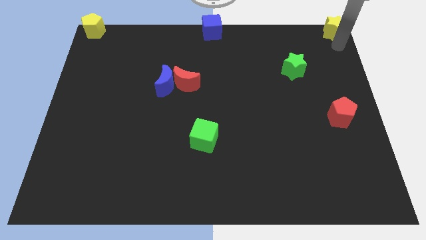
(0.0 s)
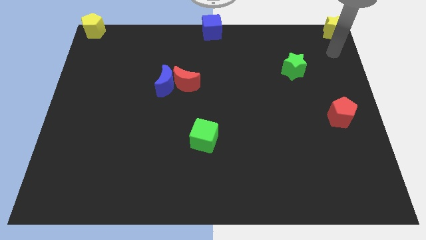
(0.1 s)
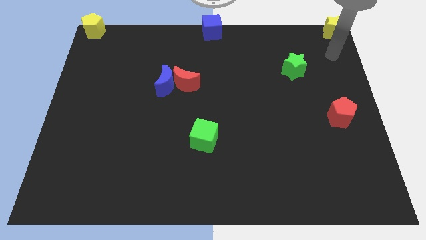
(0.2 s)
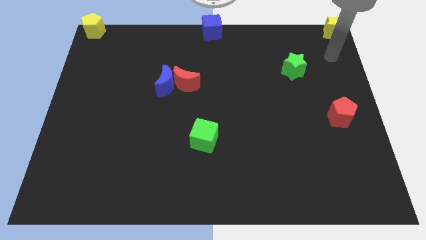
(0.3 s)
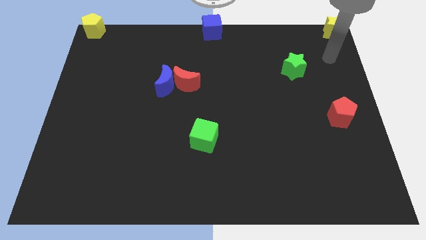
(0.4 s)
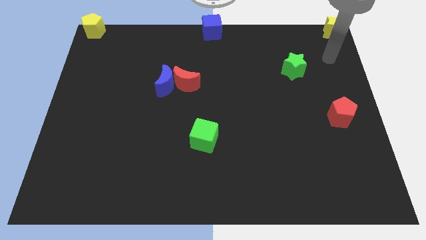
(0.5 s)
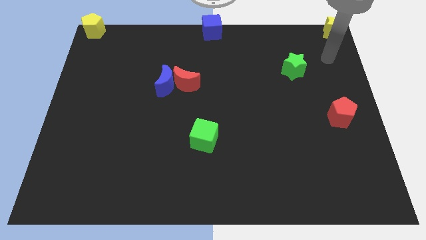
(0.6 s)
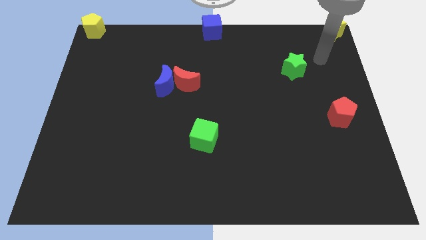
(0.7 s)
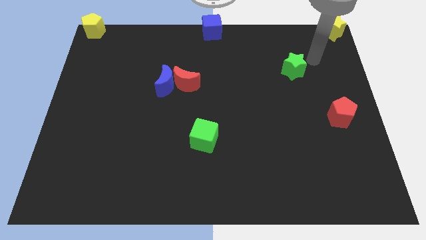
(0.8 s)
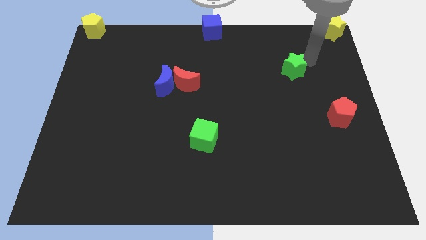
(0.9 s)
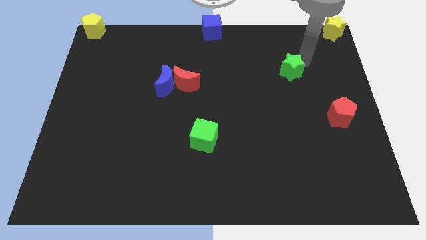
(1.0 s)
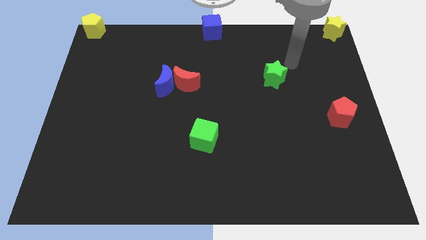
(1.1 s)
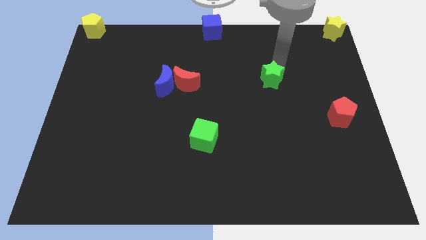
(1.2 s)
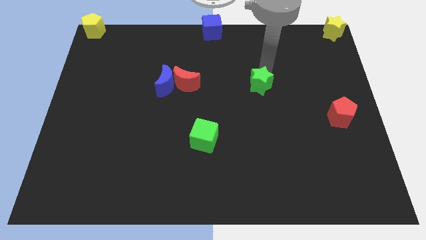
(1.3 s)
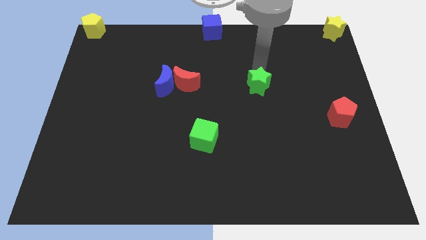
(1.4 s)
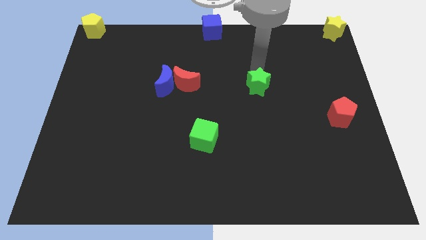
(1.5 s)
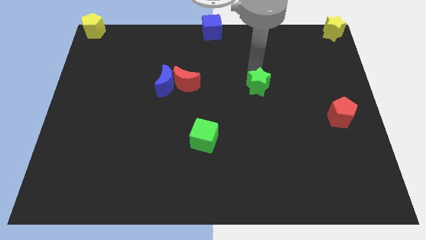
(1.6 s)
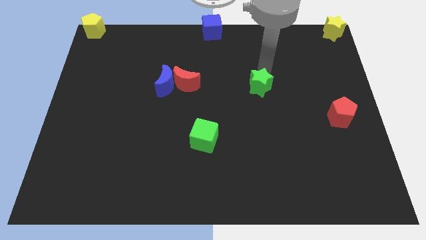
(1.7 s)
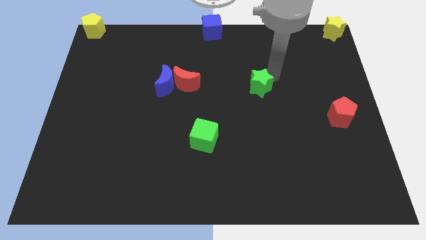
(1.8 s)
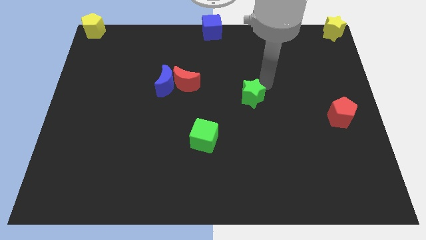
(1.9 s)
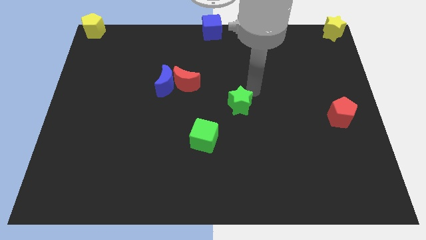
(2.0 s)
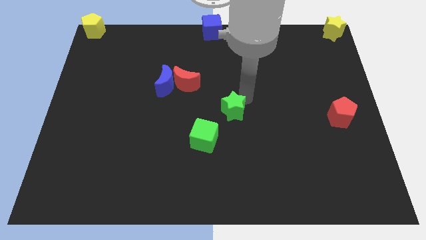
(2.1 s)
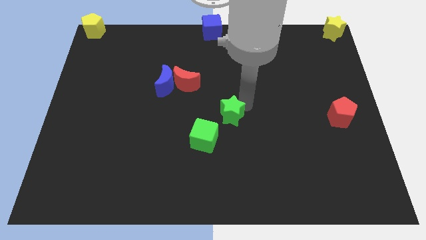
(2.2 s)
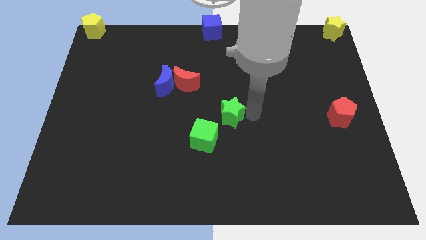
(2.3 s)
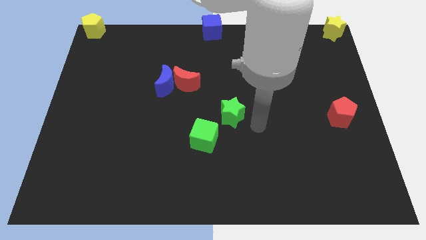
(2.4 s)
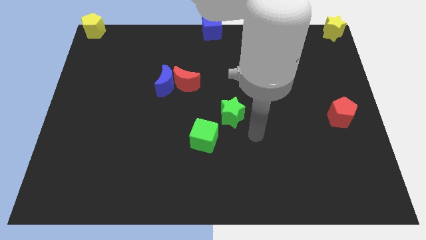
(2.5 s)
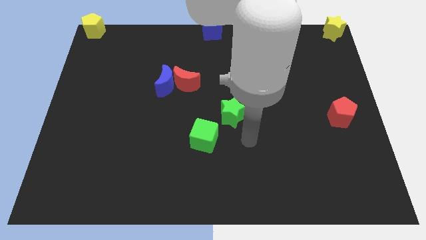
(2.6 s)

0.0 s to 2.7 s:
move the green star near the green cube

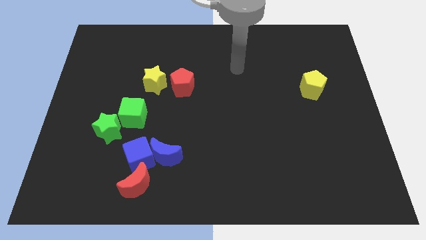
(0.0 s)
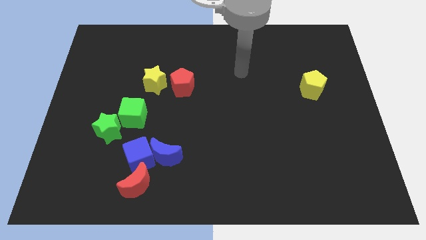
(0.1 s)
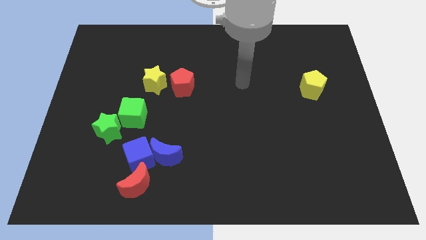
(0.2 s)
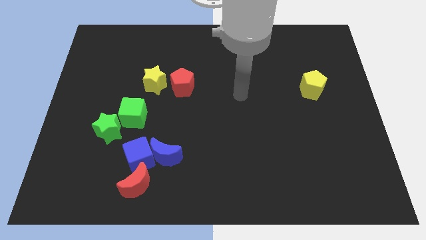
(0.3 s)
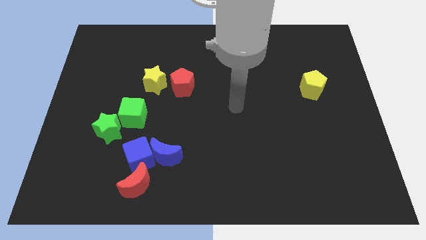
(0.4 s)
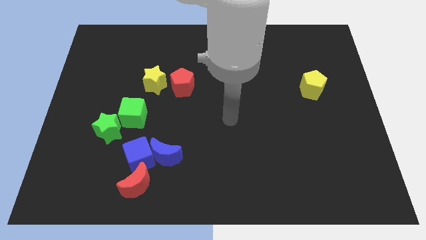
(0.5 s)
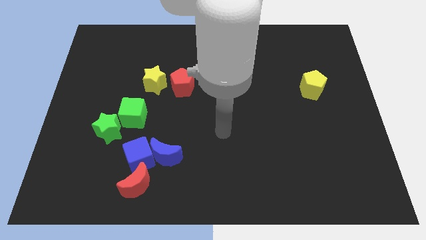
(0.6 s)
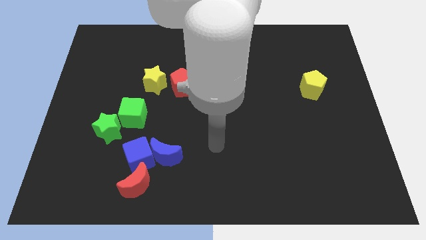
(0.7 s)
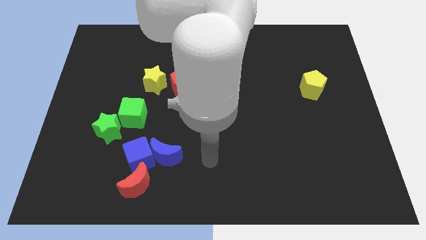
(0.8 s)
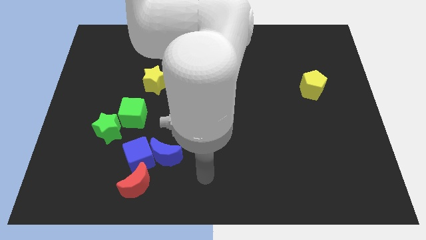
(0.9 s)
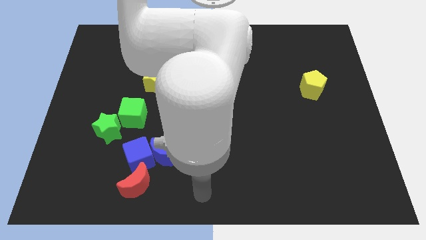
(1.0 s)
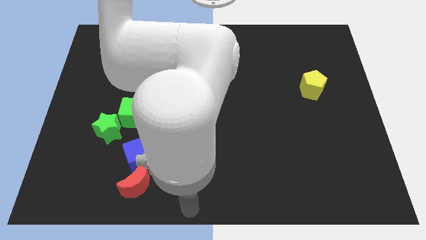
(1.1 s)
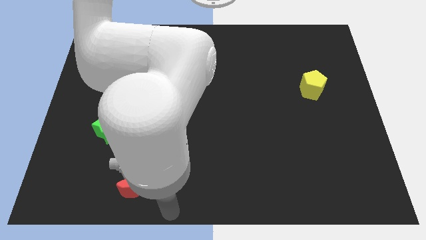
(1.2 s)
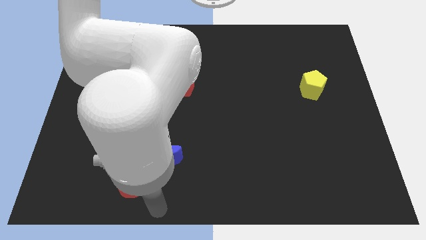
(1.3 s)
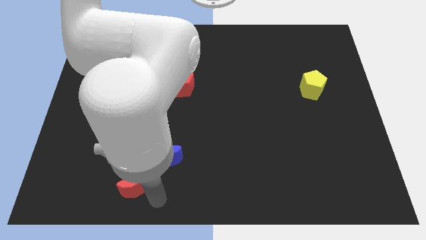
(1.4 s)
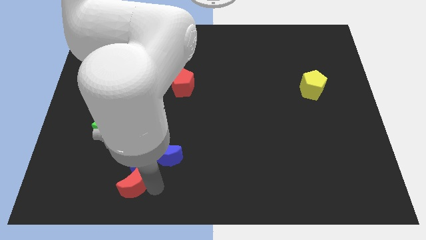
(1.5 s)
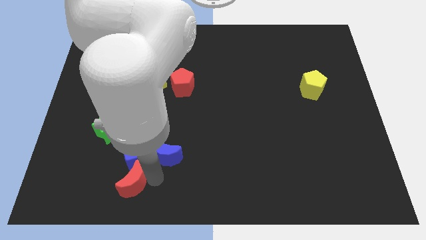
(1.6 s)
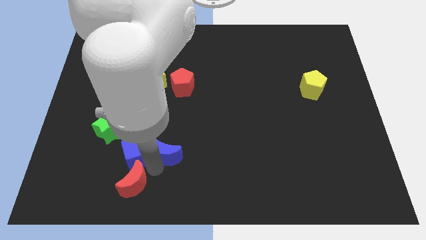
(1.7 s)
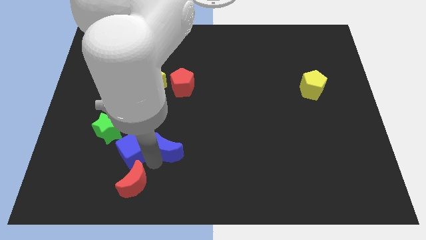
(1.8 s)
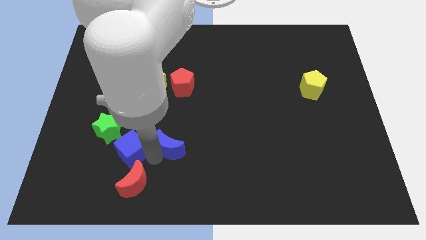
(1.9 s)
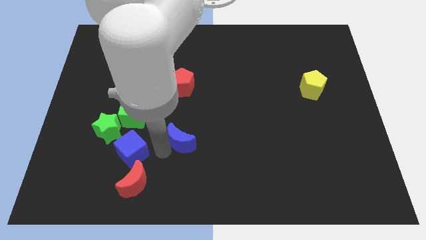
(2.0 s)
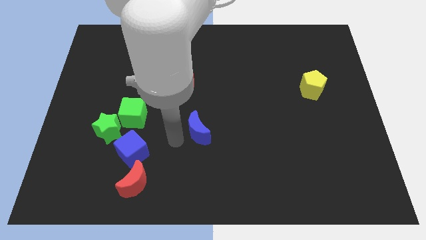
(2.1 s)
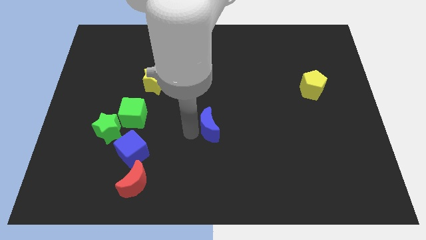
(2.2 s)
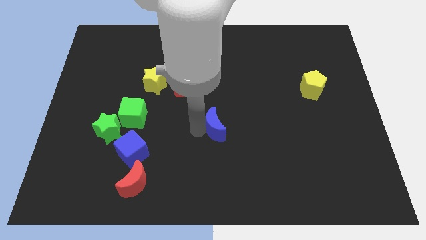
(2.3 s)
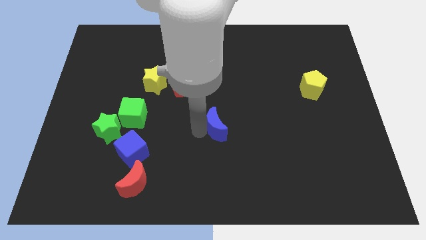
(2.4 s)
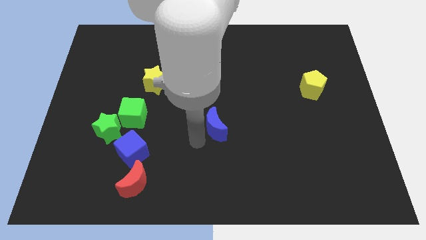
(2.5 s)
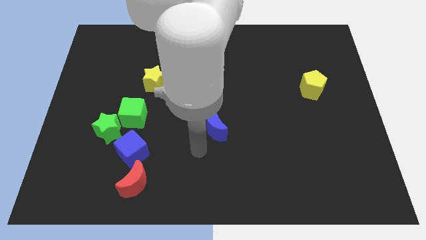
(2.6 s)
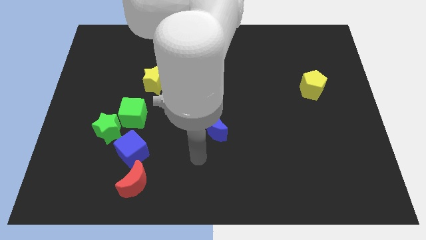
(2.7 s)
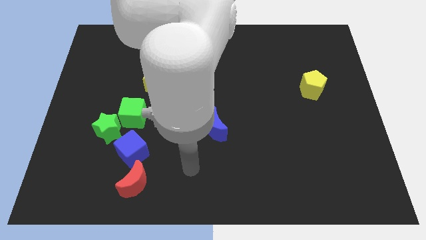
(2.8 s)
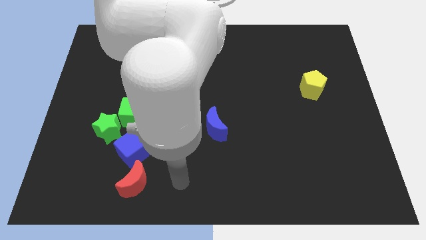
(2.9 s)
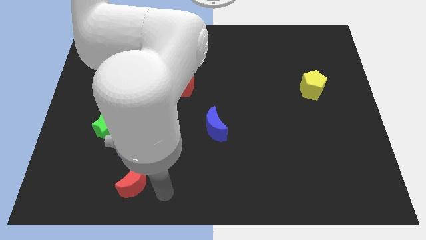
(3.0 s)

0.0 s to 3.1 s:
move the blue crescent away from the blue cube

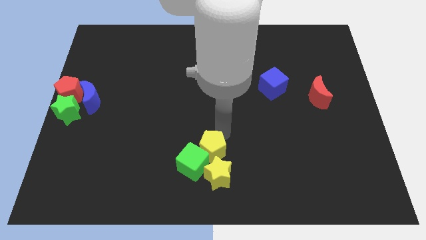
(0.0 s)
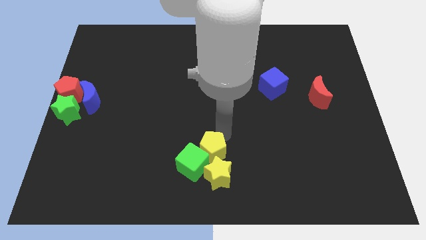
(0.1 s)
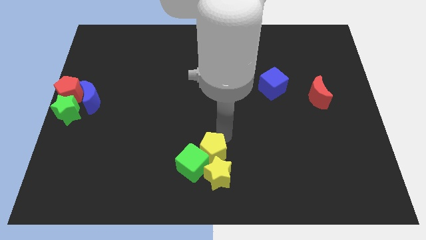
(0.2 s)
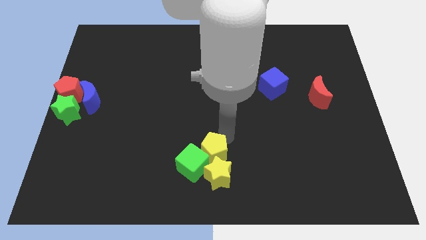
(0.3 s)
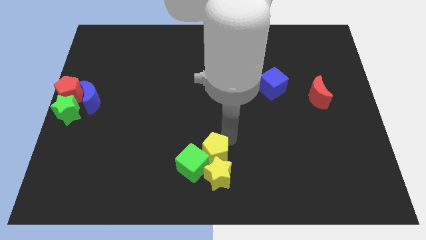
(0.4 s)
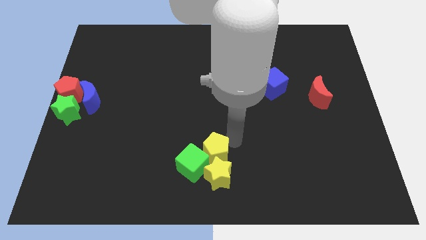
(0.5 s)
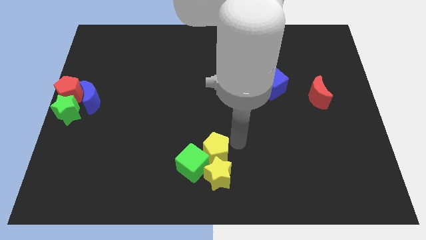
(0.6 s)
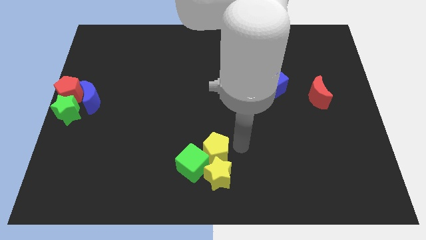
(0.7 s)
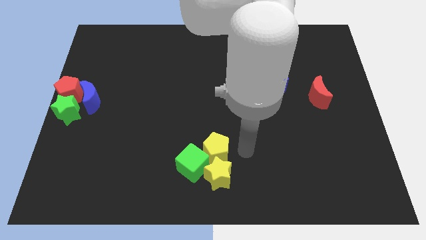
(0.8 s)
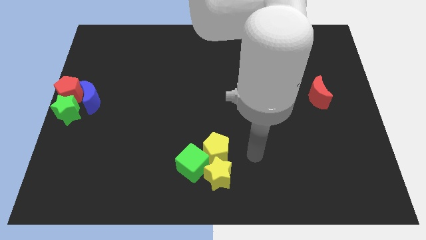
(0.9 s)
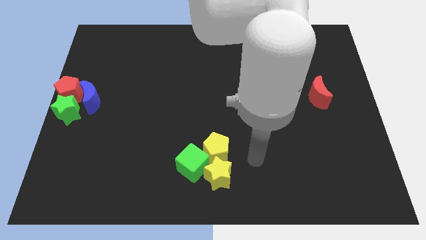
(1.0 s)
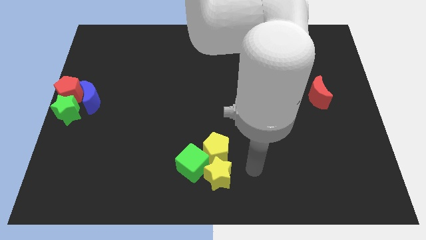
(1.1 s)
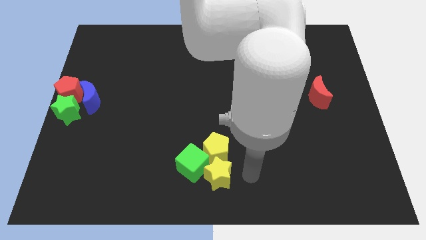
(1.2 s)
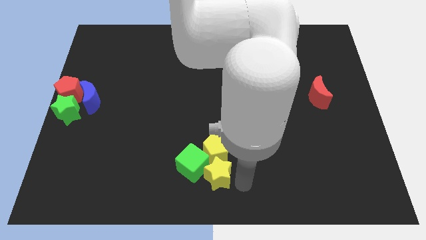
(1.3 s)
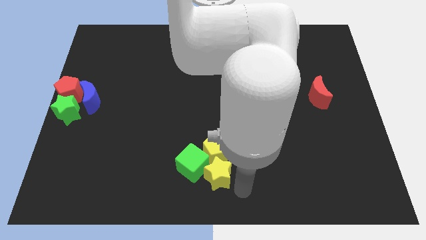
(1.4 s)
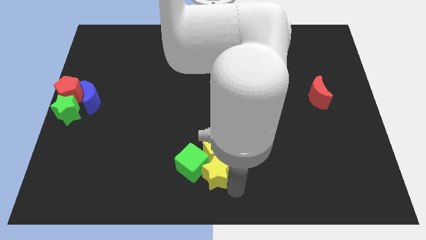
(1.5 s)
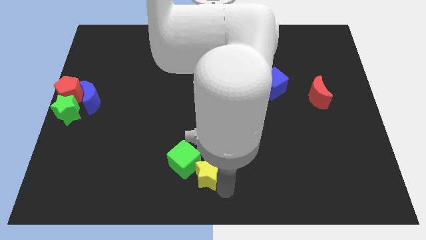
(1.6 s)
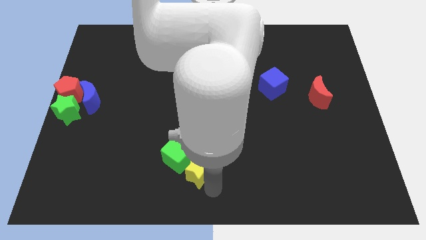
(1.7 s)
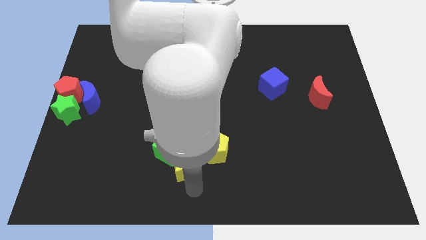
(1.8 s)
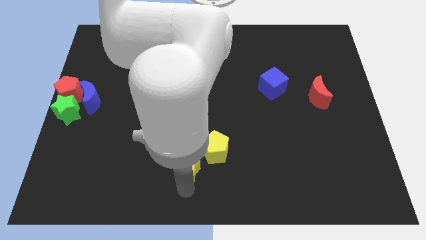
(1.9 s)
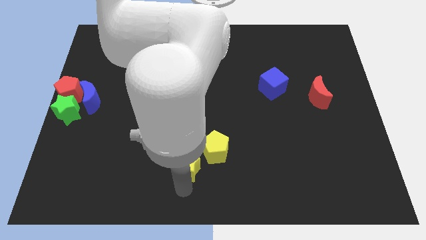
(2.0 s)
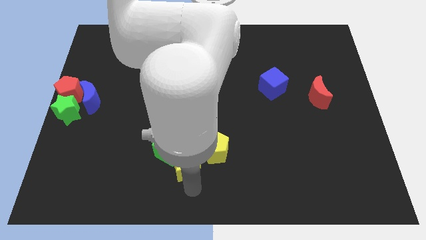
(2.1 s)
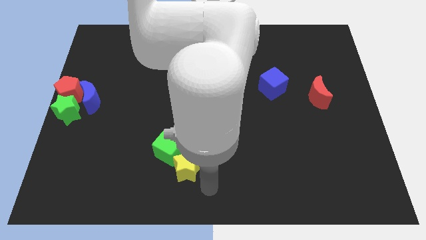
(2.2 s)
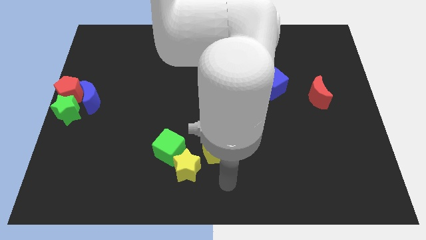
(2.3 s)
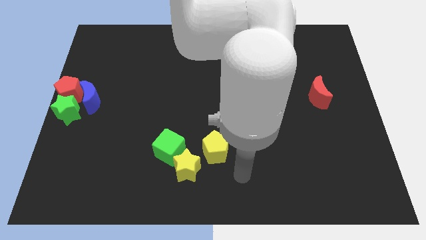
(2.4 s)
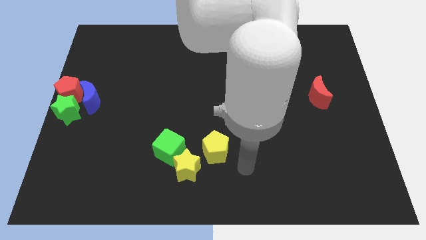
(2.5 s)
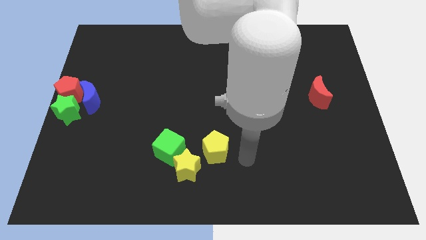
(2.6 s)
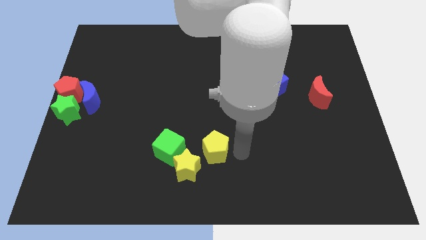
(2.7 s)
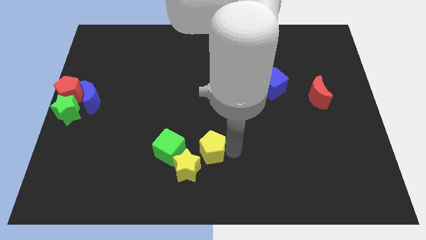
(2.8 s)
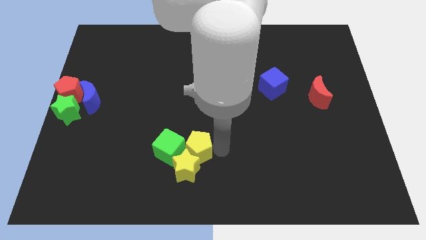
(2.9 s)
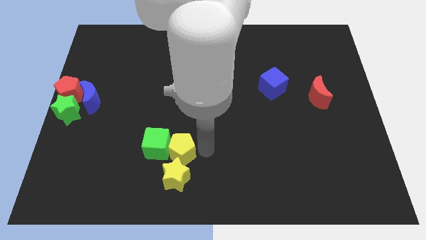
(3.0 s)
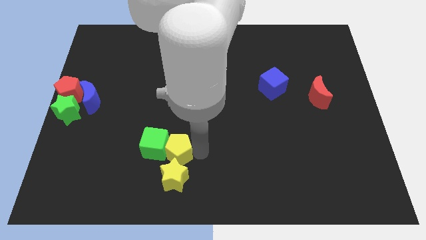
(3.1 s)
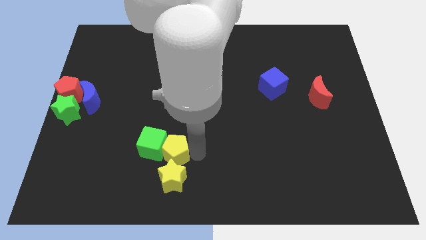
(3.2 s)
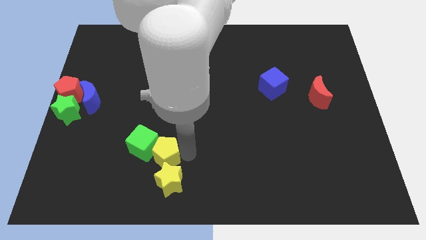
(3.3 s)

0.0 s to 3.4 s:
push the yellow blocks and the green cube towards the left of the board
